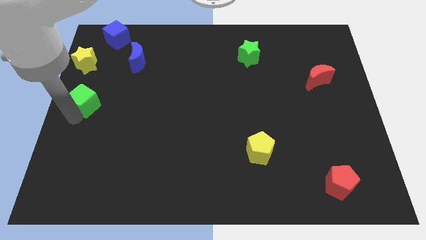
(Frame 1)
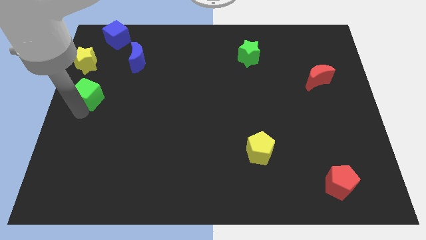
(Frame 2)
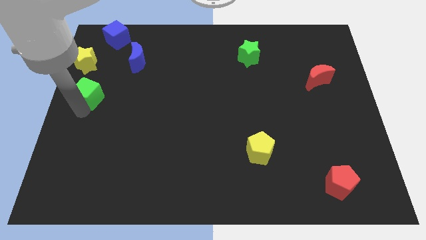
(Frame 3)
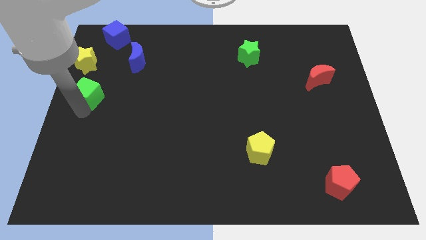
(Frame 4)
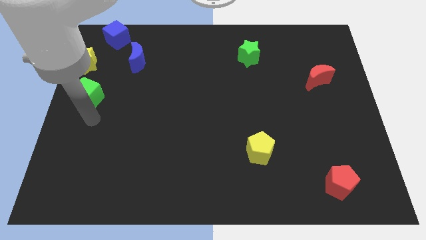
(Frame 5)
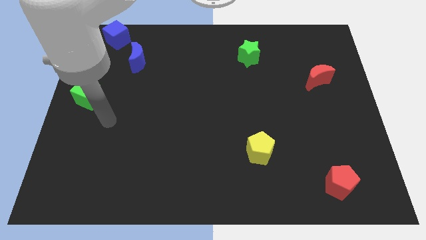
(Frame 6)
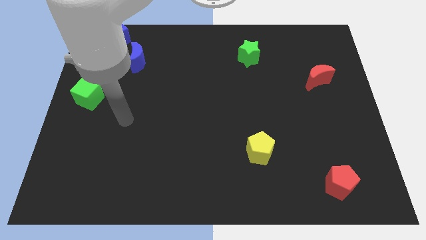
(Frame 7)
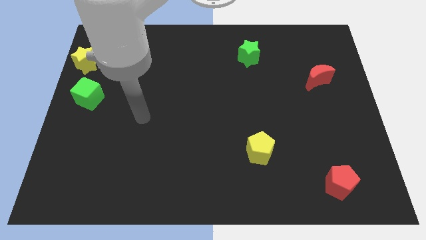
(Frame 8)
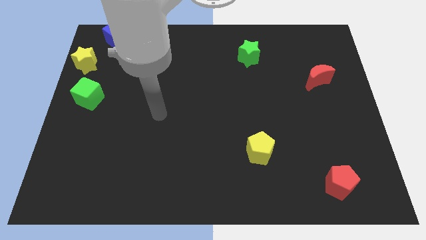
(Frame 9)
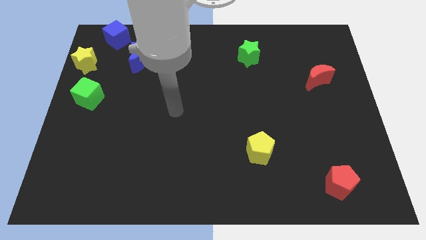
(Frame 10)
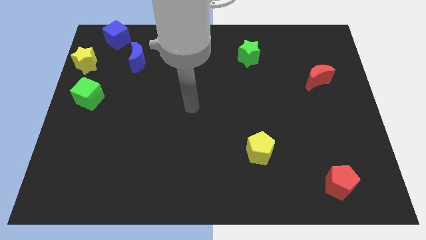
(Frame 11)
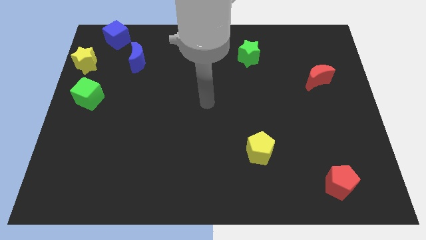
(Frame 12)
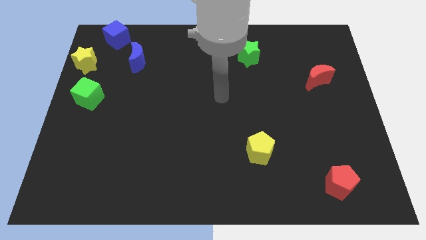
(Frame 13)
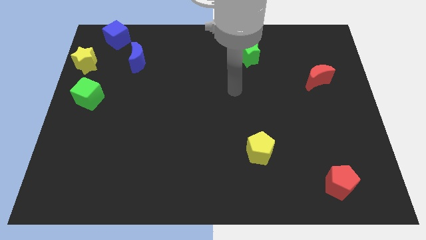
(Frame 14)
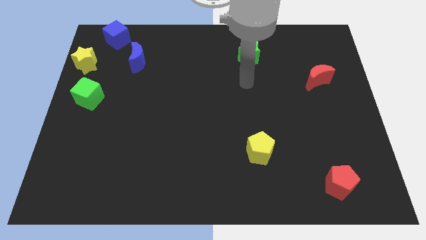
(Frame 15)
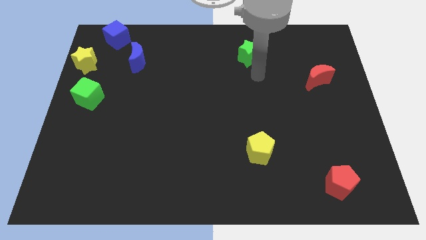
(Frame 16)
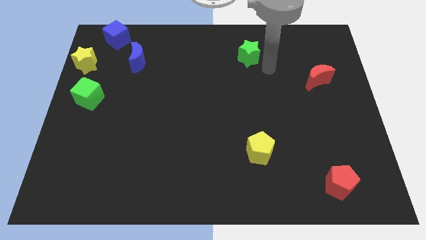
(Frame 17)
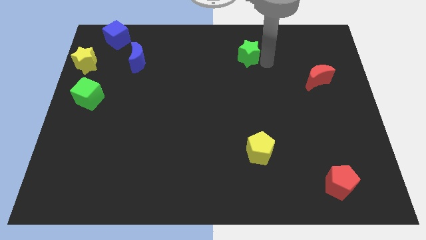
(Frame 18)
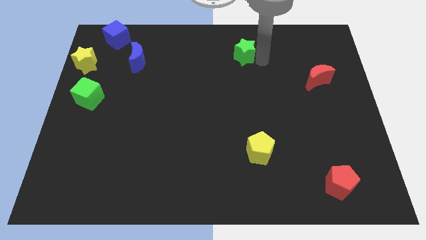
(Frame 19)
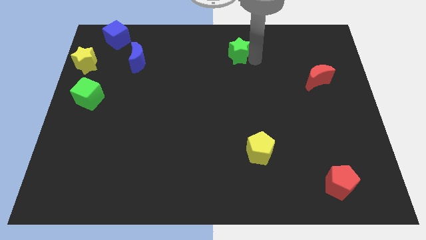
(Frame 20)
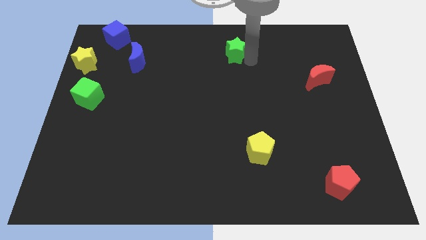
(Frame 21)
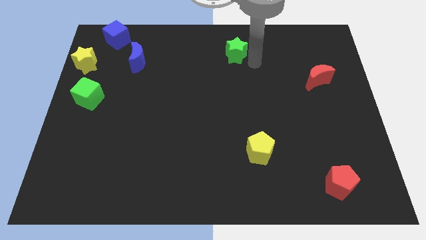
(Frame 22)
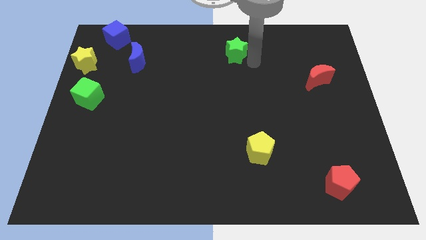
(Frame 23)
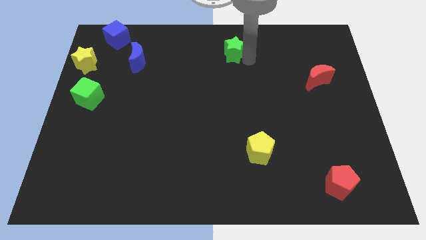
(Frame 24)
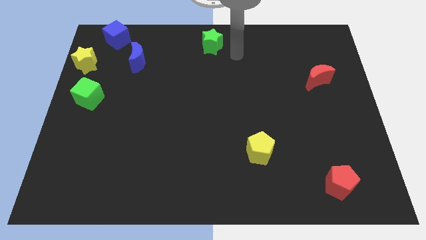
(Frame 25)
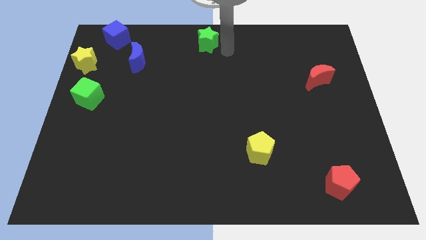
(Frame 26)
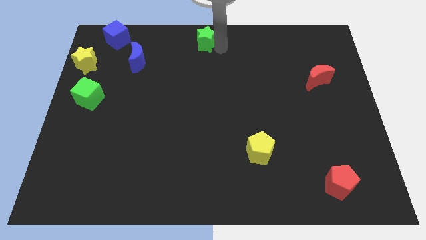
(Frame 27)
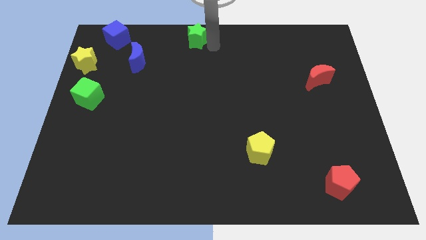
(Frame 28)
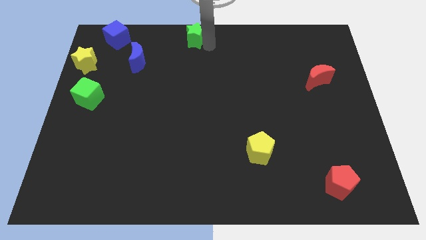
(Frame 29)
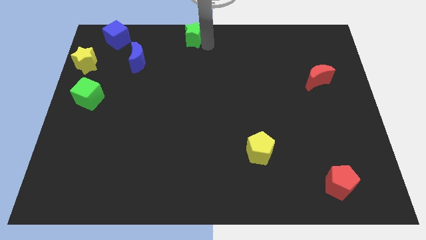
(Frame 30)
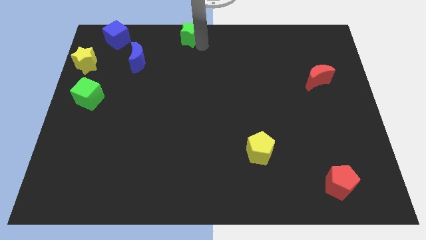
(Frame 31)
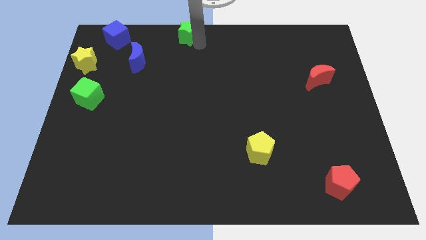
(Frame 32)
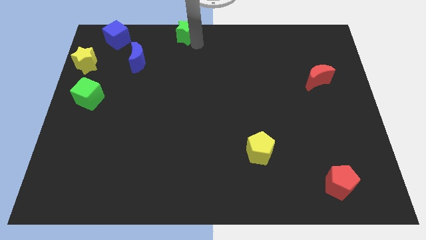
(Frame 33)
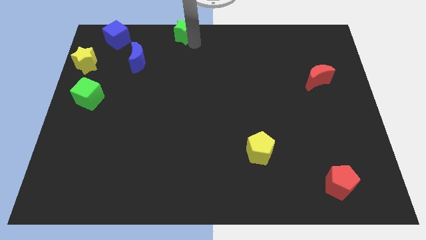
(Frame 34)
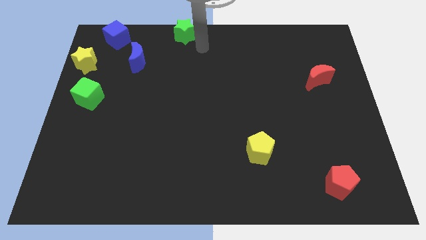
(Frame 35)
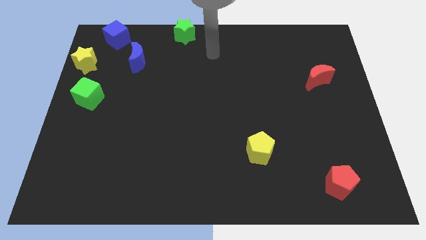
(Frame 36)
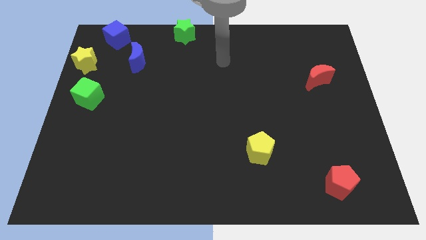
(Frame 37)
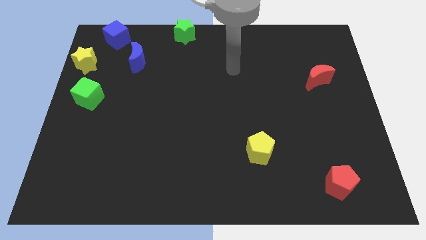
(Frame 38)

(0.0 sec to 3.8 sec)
move green star to the top

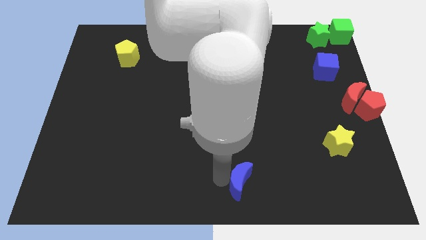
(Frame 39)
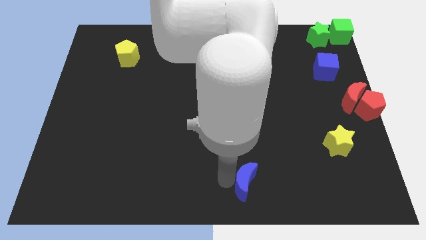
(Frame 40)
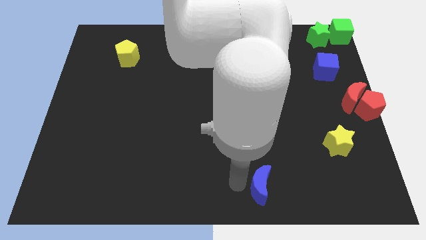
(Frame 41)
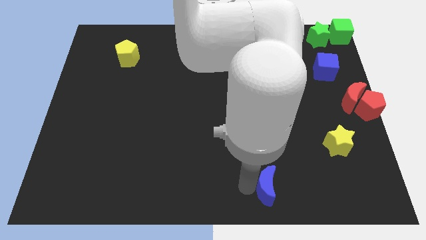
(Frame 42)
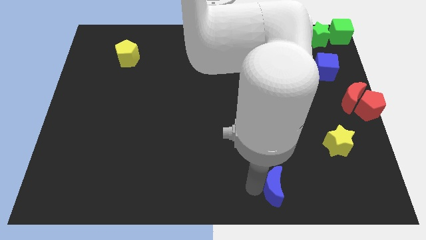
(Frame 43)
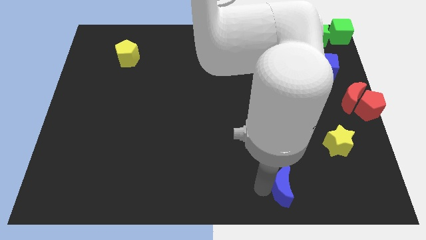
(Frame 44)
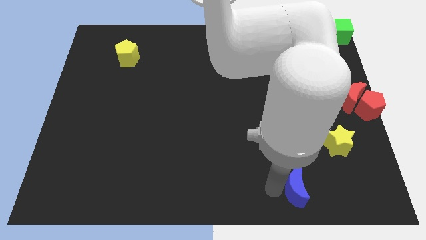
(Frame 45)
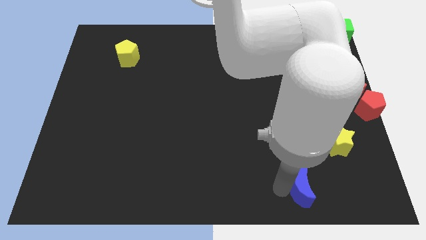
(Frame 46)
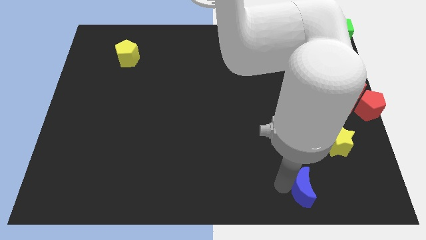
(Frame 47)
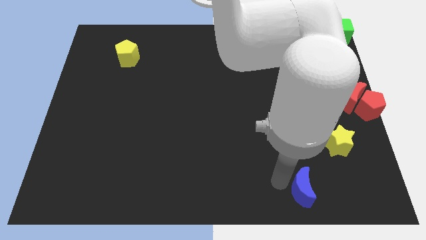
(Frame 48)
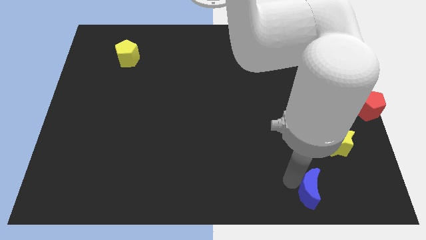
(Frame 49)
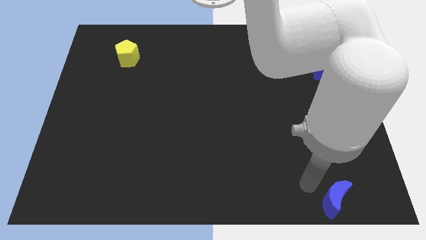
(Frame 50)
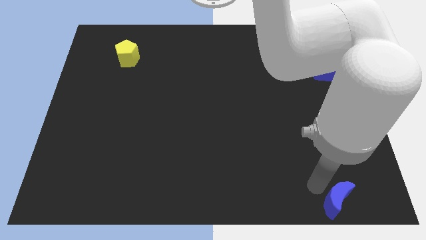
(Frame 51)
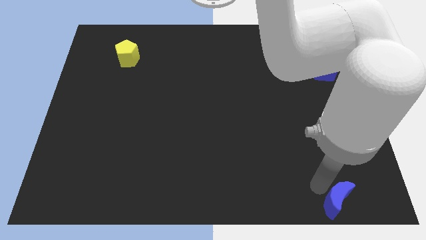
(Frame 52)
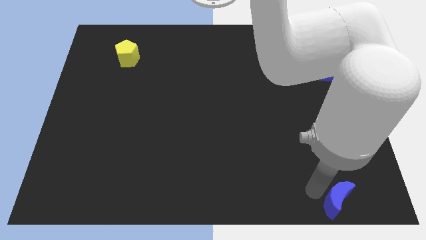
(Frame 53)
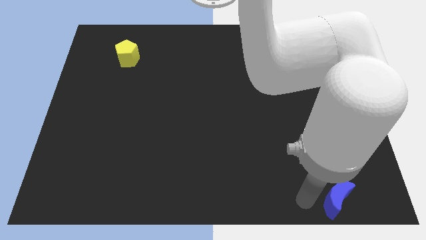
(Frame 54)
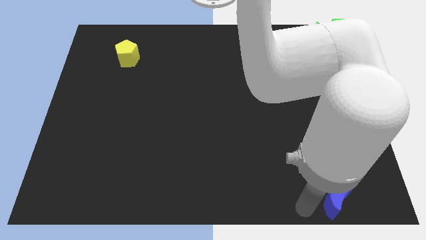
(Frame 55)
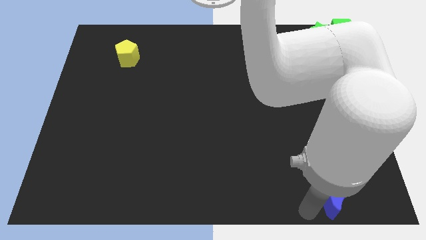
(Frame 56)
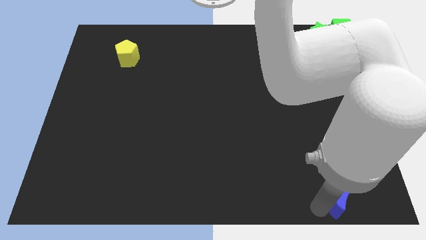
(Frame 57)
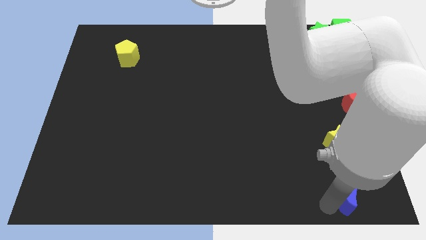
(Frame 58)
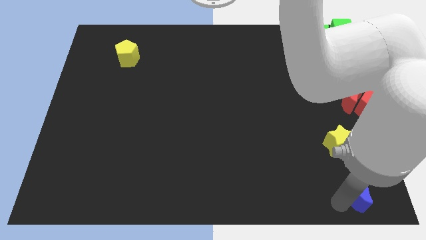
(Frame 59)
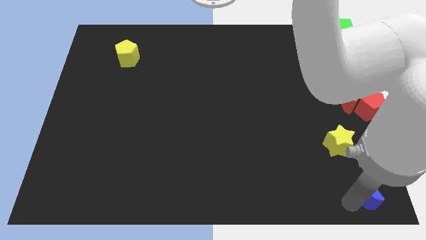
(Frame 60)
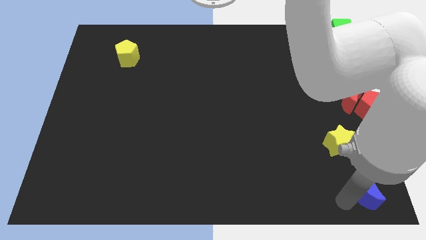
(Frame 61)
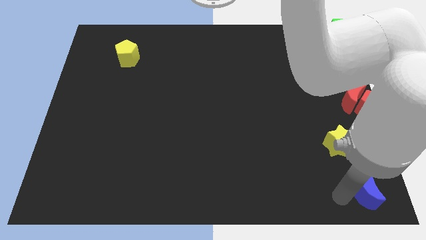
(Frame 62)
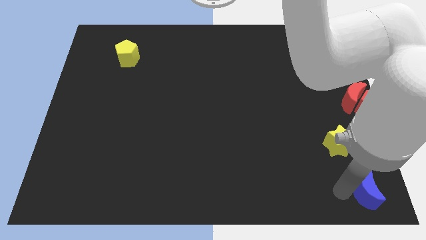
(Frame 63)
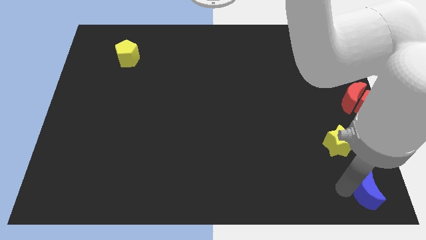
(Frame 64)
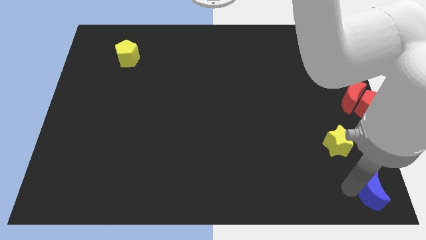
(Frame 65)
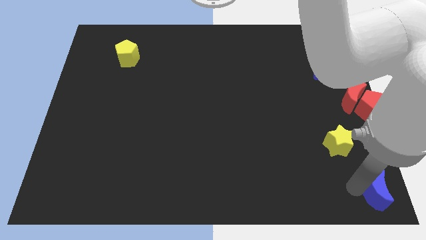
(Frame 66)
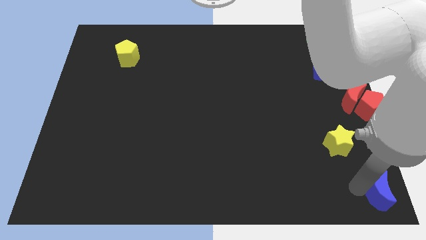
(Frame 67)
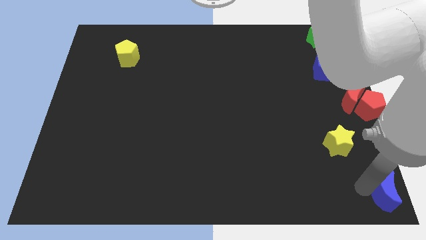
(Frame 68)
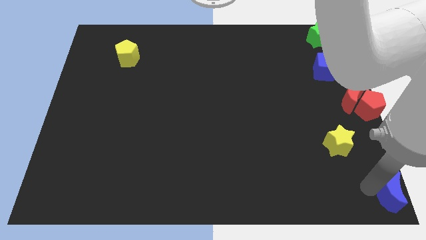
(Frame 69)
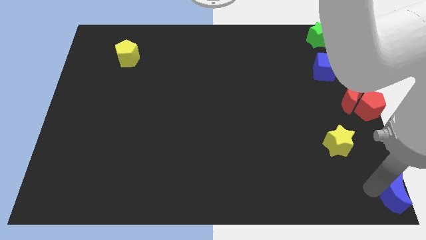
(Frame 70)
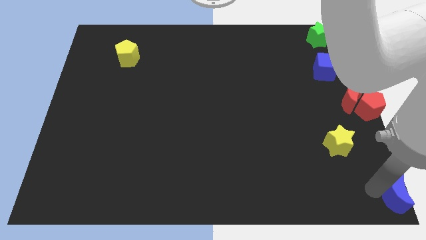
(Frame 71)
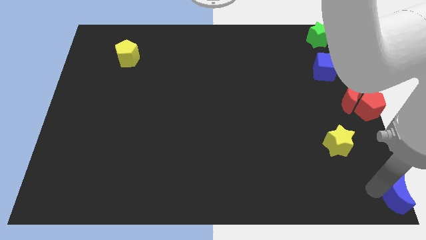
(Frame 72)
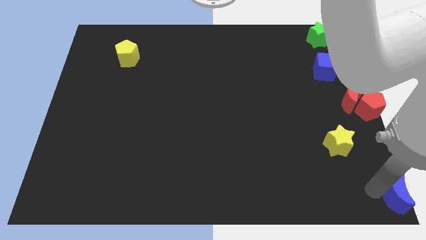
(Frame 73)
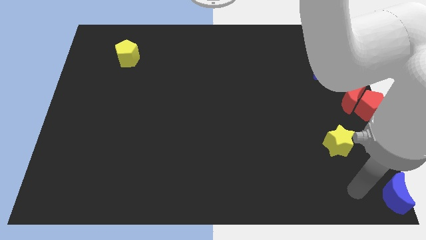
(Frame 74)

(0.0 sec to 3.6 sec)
place the blue moon at the bottom right corner of the board

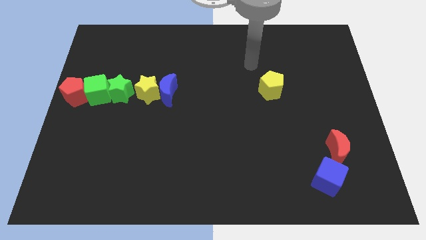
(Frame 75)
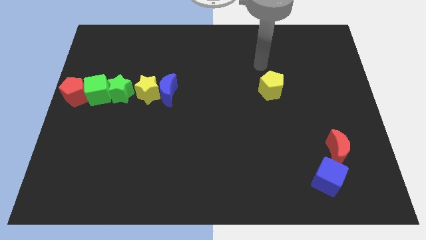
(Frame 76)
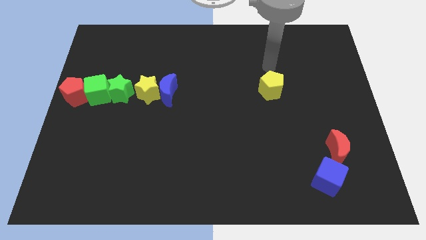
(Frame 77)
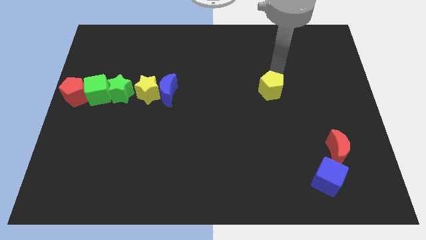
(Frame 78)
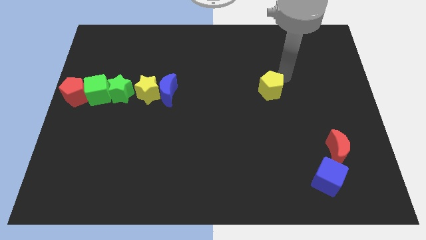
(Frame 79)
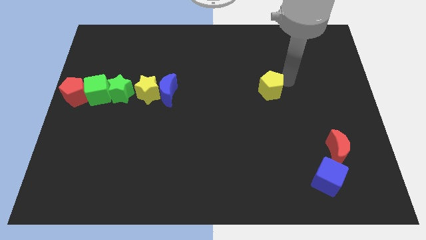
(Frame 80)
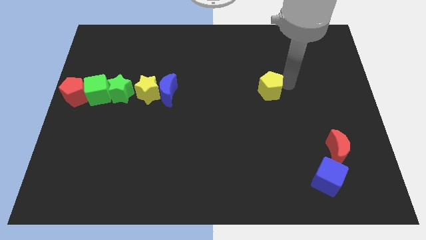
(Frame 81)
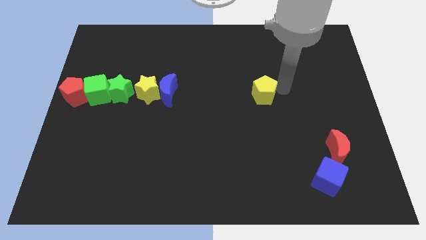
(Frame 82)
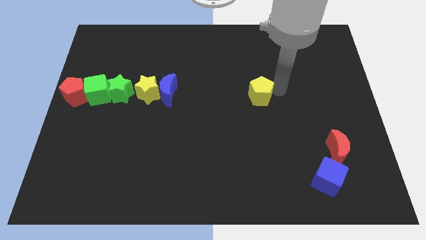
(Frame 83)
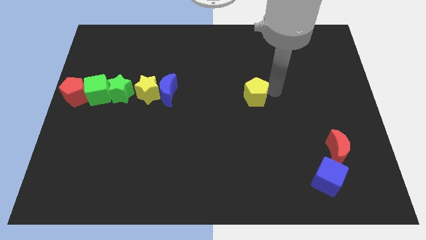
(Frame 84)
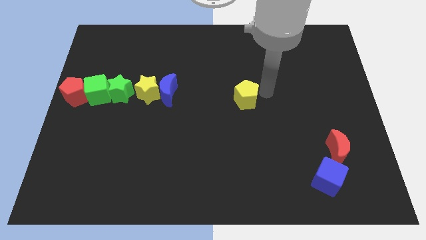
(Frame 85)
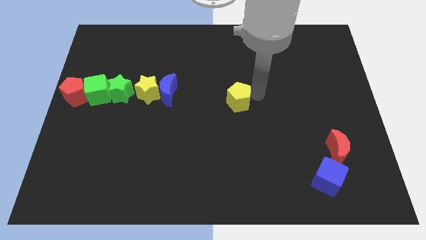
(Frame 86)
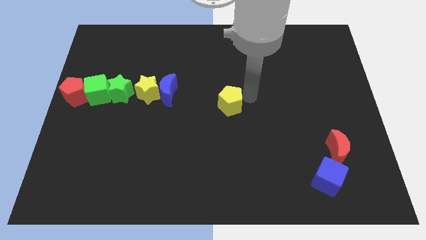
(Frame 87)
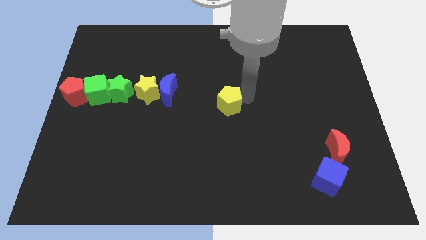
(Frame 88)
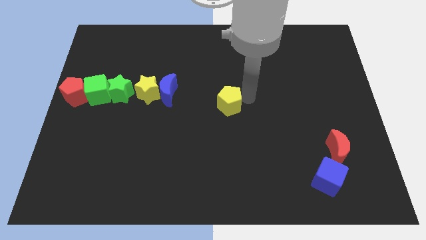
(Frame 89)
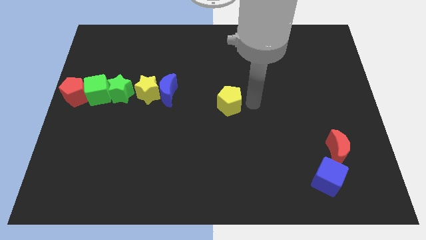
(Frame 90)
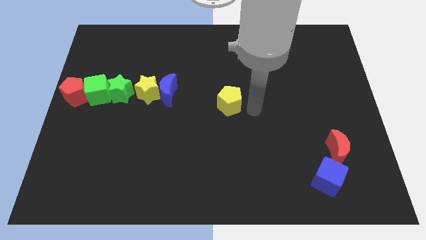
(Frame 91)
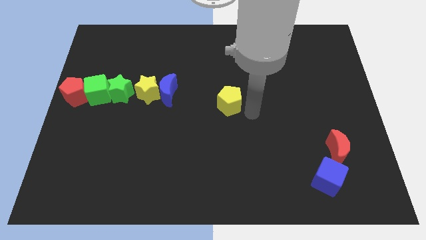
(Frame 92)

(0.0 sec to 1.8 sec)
place the yellow pentagon towards the center of the board
